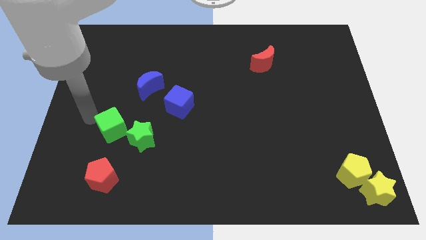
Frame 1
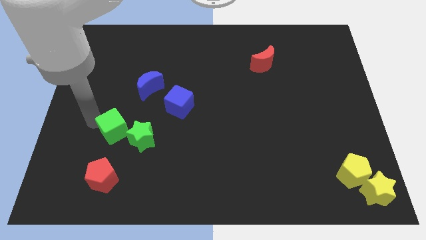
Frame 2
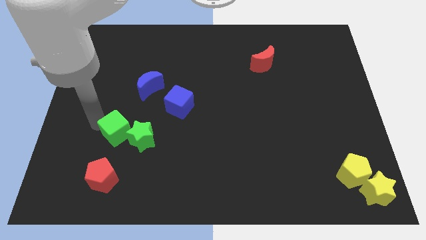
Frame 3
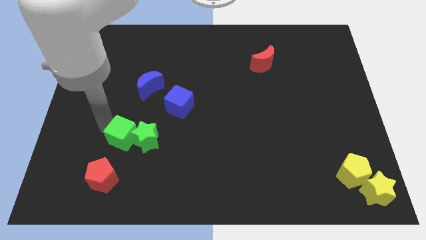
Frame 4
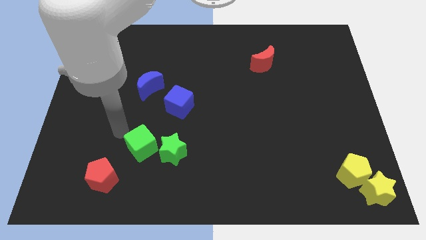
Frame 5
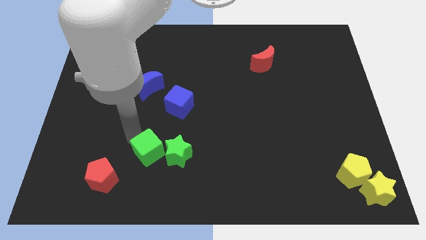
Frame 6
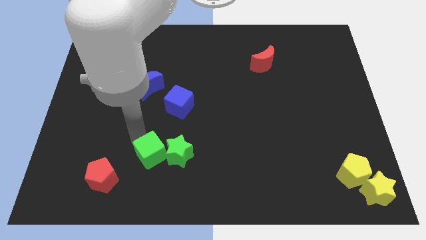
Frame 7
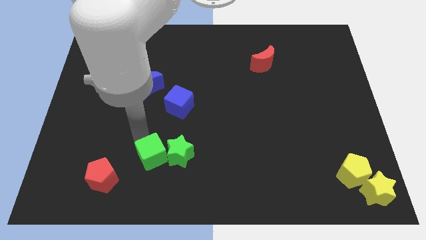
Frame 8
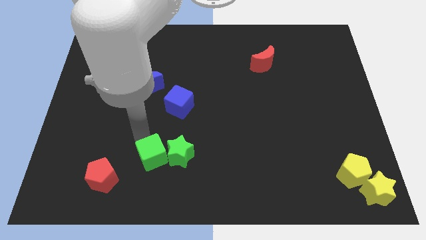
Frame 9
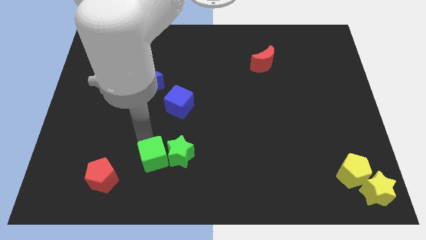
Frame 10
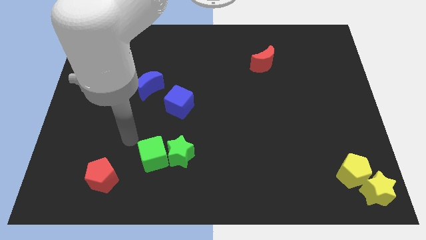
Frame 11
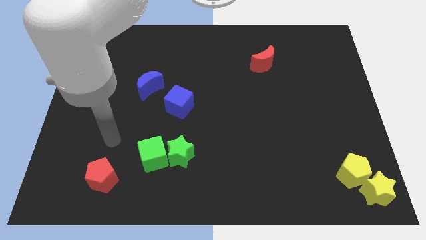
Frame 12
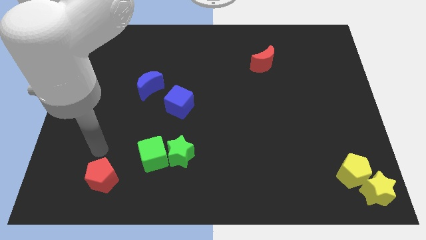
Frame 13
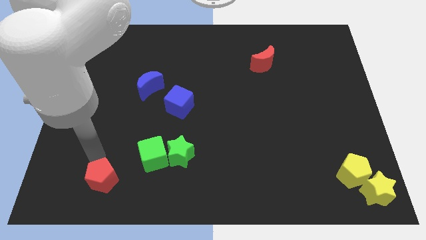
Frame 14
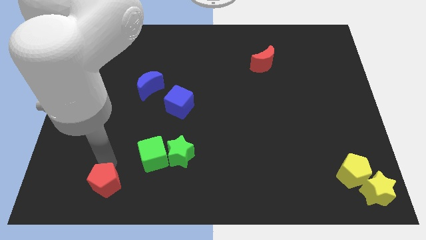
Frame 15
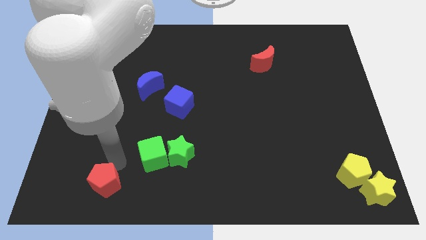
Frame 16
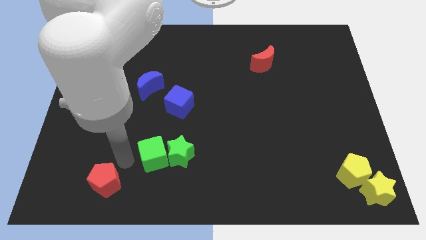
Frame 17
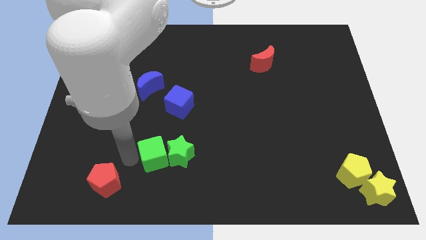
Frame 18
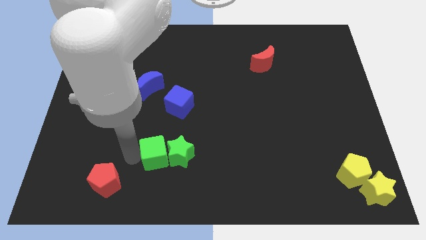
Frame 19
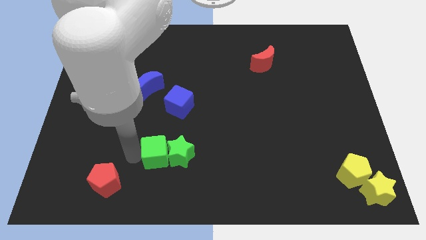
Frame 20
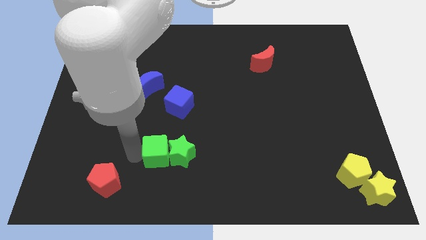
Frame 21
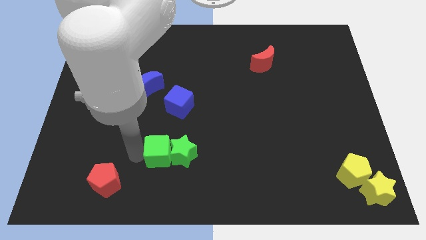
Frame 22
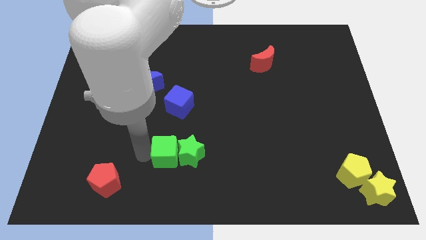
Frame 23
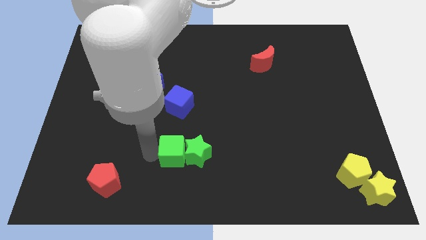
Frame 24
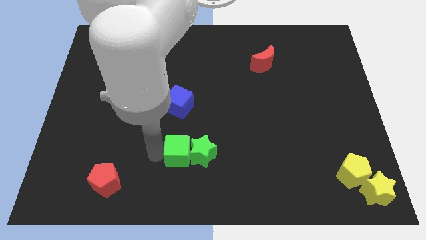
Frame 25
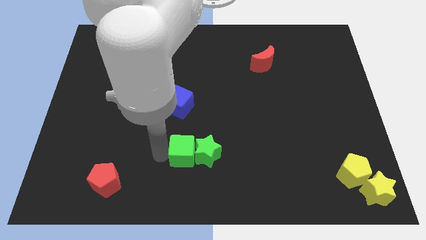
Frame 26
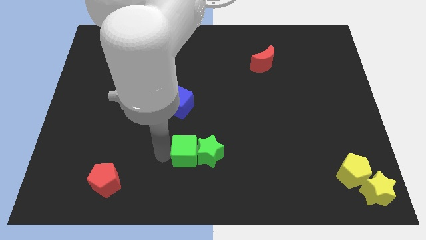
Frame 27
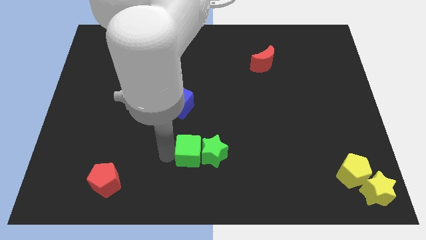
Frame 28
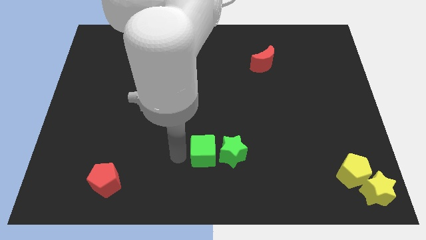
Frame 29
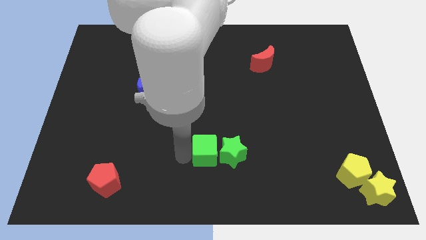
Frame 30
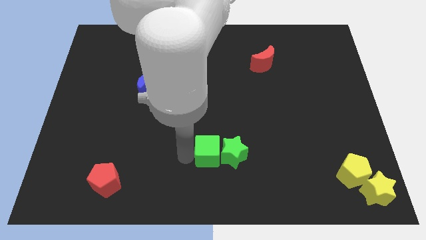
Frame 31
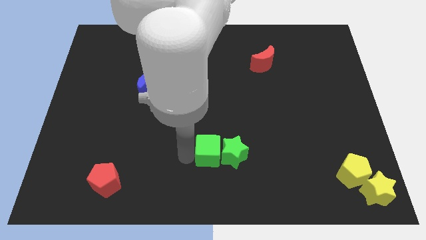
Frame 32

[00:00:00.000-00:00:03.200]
put both the green blocks at the bottom center of the board

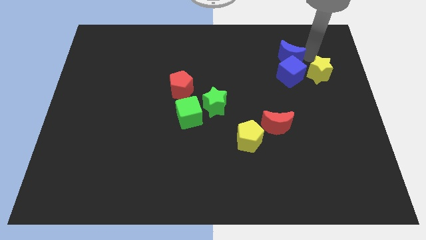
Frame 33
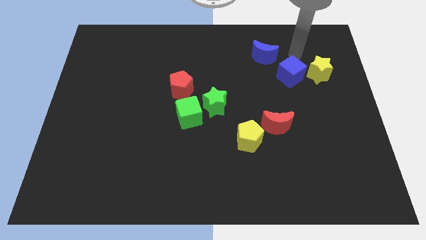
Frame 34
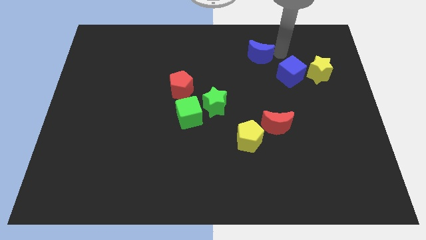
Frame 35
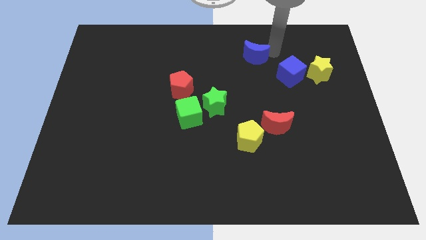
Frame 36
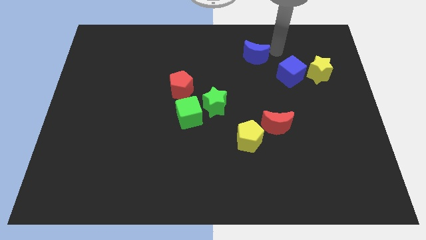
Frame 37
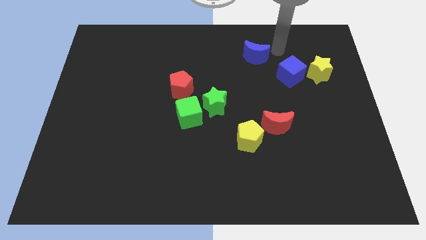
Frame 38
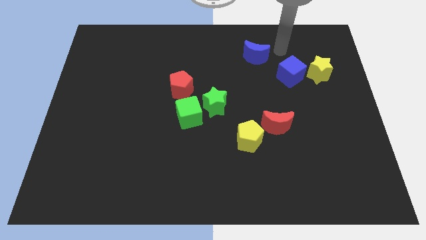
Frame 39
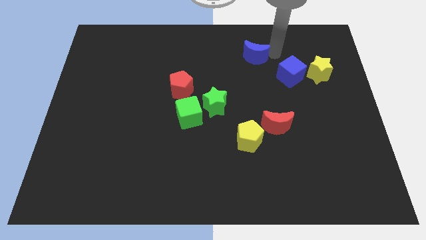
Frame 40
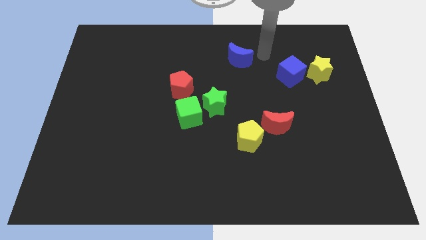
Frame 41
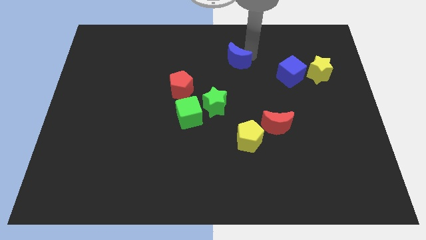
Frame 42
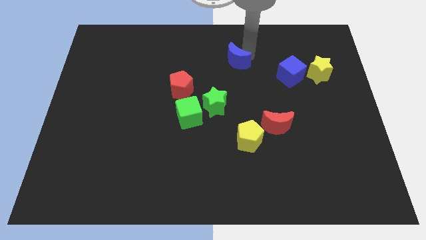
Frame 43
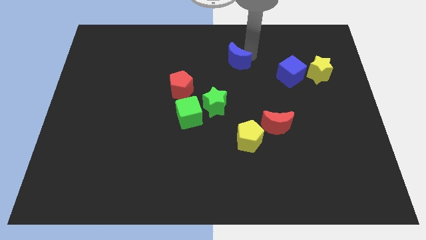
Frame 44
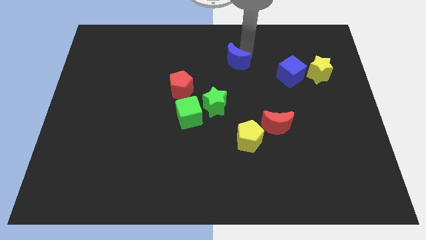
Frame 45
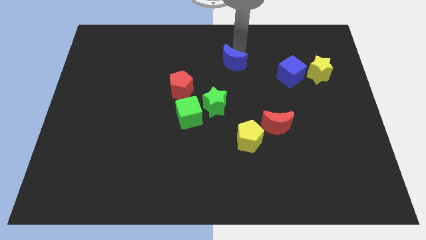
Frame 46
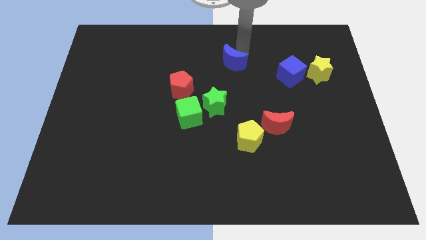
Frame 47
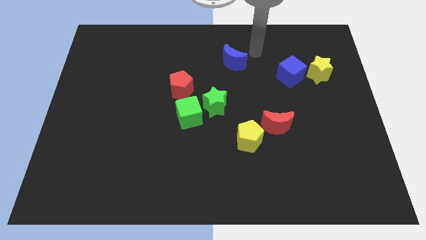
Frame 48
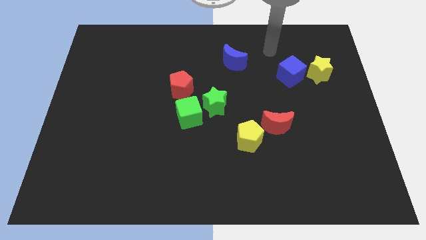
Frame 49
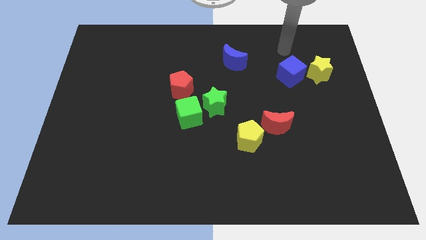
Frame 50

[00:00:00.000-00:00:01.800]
move the blue crescent slightly to the left

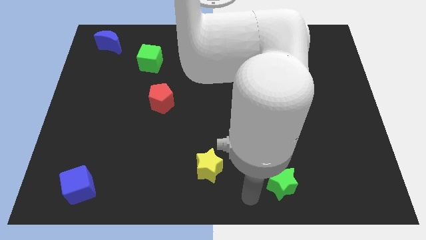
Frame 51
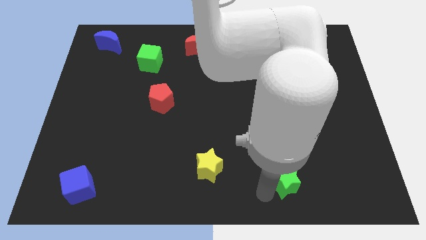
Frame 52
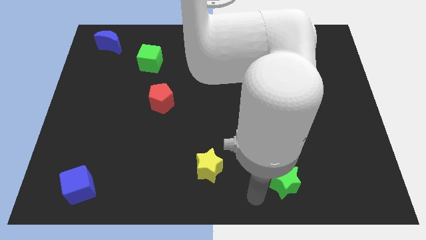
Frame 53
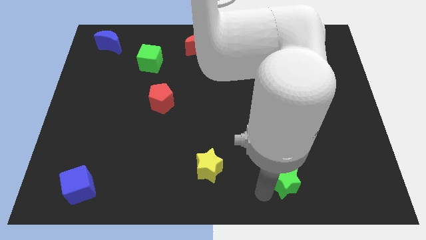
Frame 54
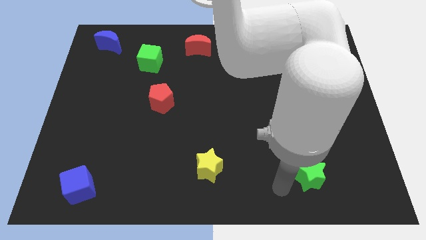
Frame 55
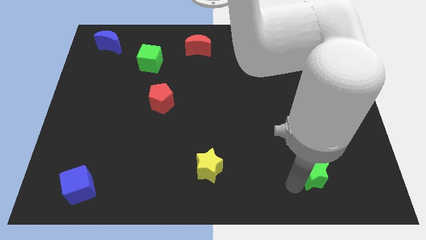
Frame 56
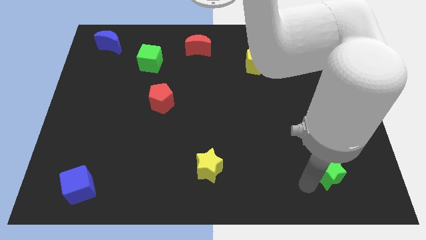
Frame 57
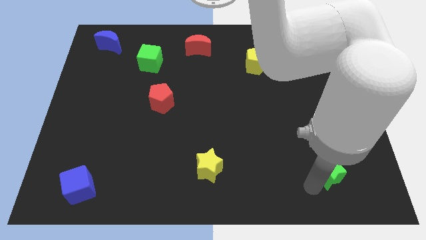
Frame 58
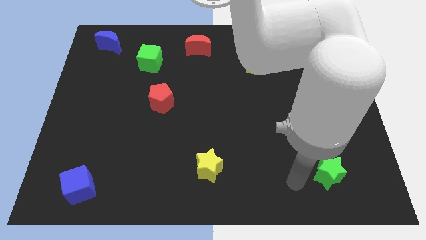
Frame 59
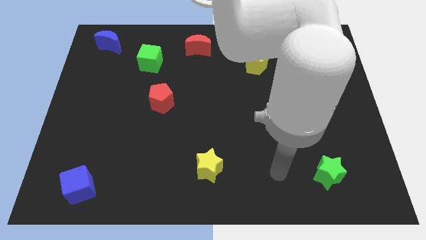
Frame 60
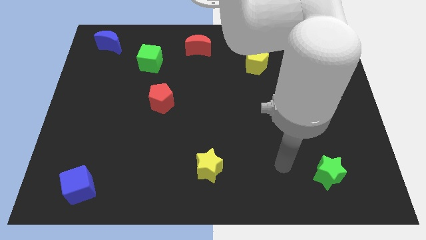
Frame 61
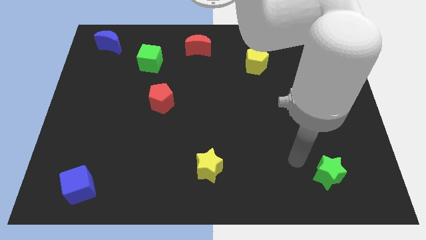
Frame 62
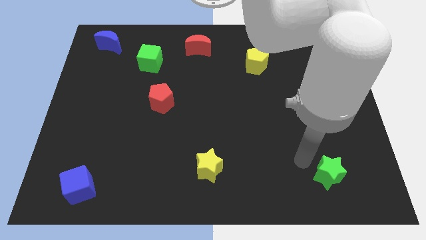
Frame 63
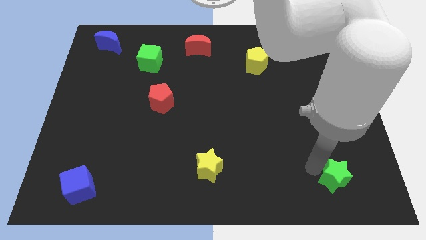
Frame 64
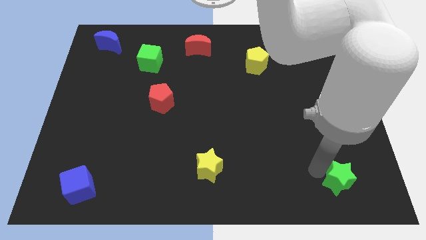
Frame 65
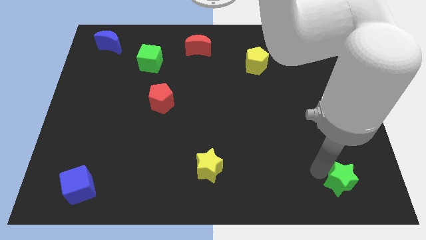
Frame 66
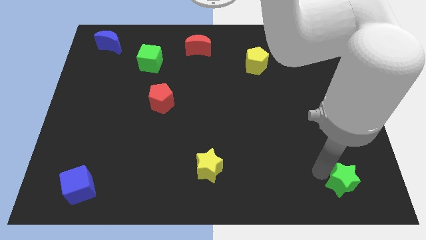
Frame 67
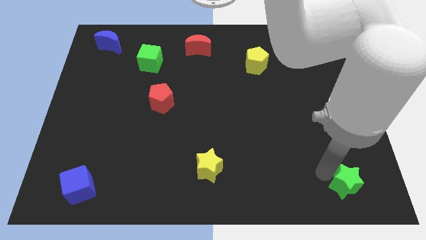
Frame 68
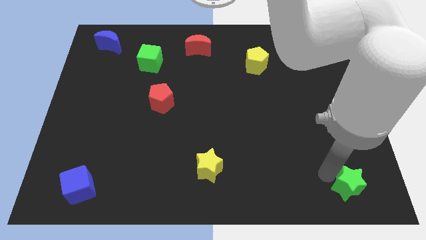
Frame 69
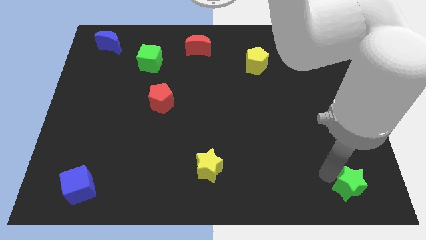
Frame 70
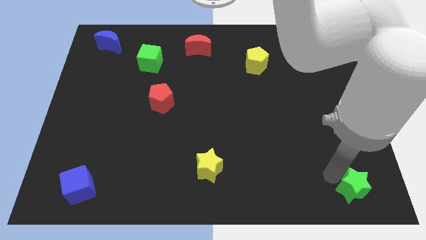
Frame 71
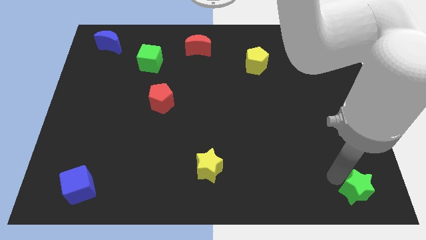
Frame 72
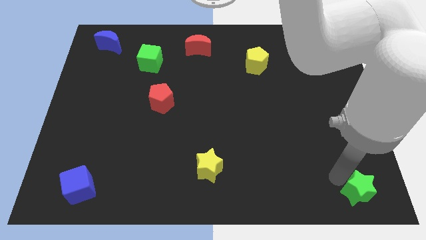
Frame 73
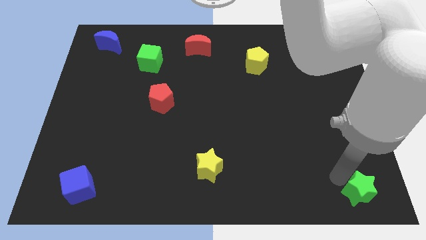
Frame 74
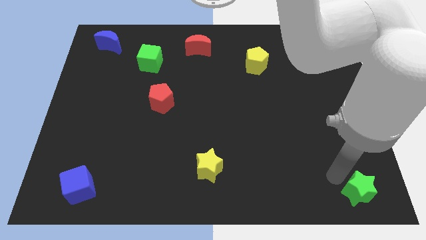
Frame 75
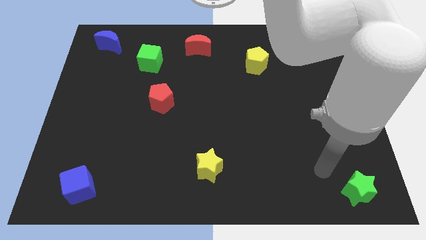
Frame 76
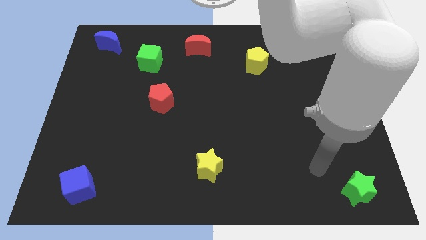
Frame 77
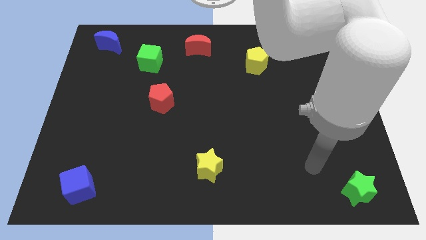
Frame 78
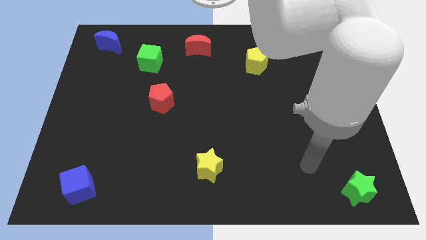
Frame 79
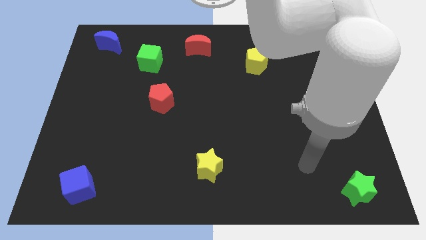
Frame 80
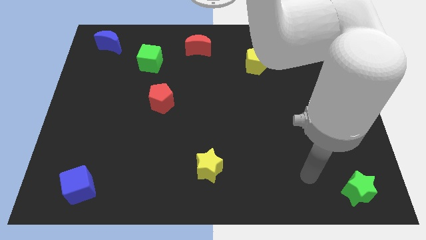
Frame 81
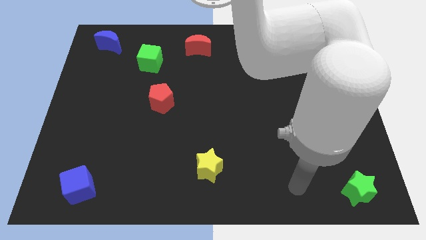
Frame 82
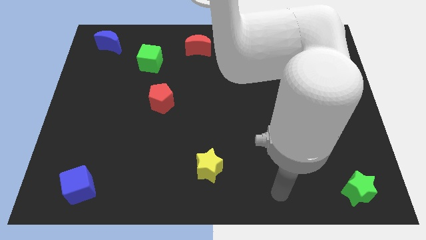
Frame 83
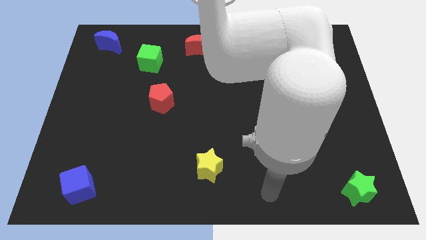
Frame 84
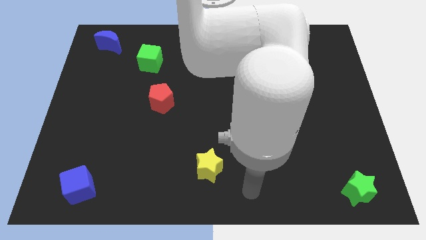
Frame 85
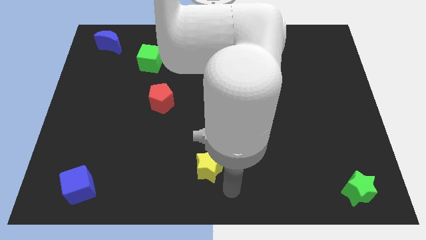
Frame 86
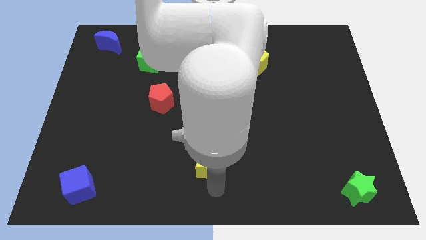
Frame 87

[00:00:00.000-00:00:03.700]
move the green star towards the bottom right corner

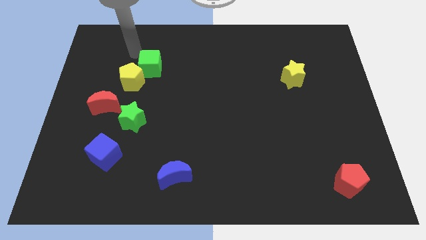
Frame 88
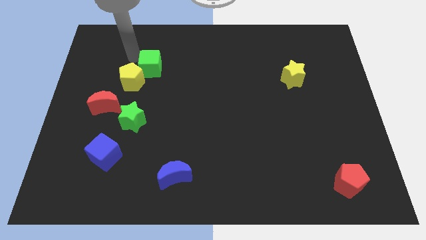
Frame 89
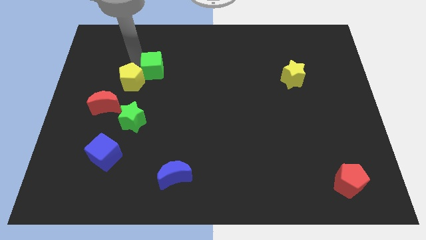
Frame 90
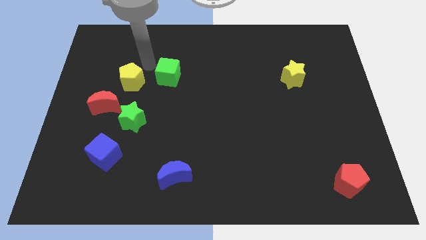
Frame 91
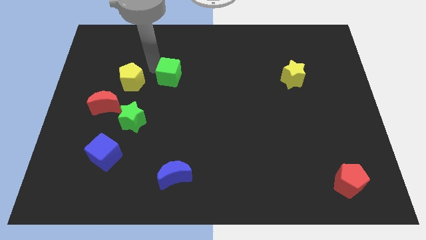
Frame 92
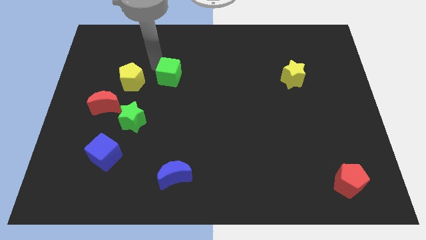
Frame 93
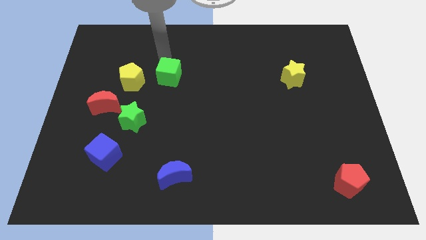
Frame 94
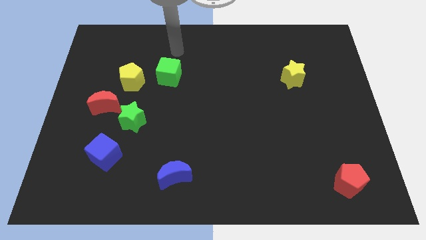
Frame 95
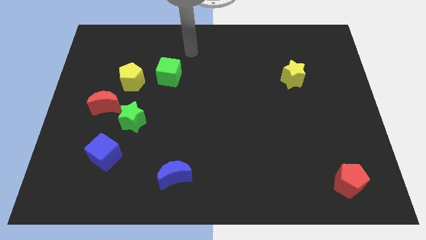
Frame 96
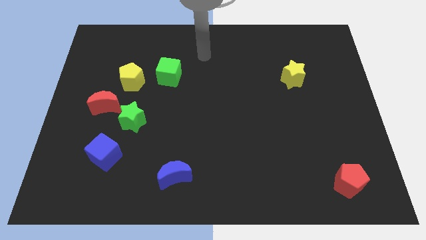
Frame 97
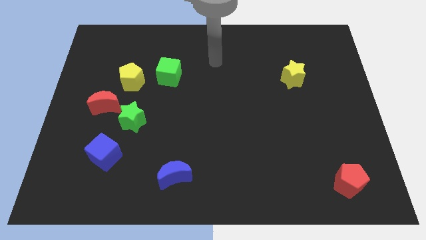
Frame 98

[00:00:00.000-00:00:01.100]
move the green cube vertically to the top side of the blue crescent
